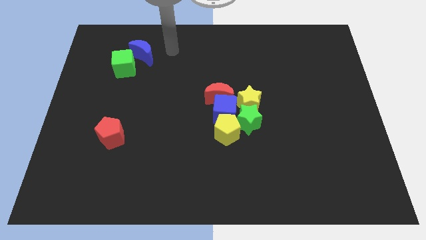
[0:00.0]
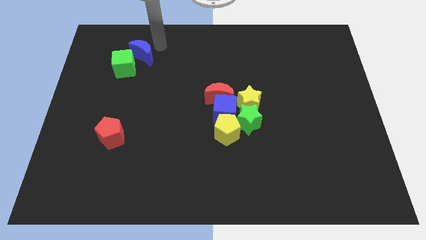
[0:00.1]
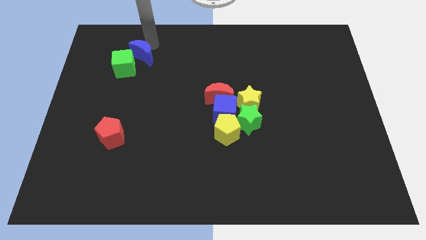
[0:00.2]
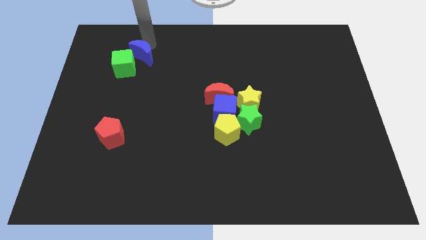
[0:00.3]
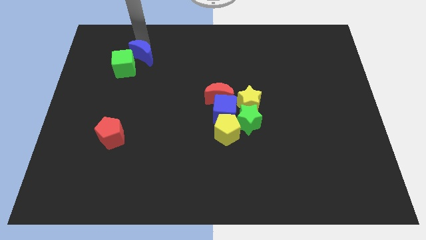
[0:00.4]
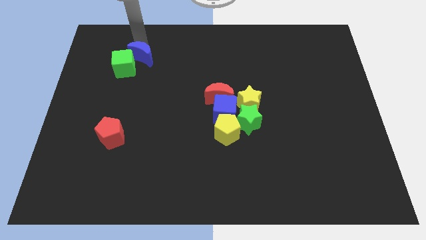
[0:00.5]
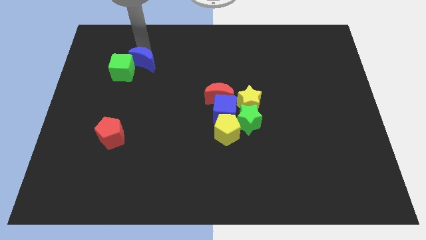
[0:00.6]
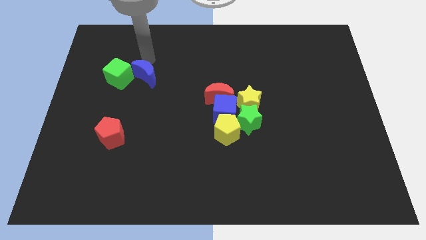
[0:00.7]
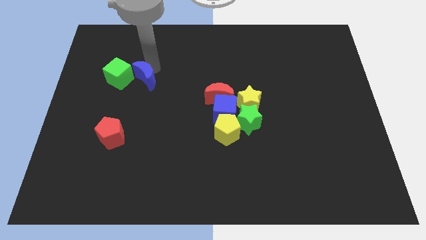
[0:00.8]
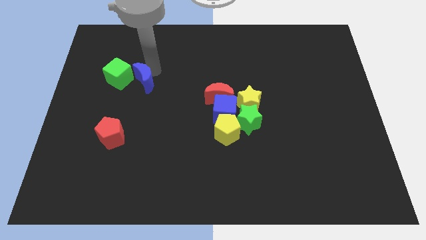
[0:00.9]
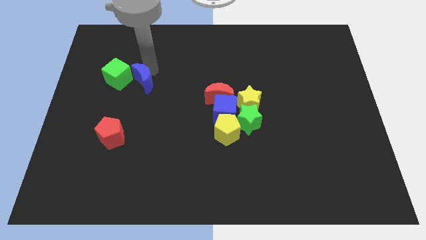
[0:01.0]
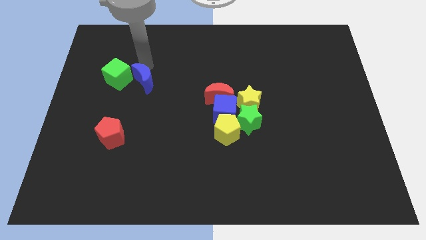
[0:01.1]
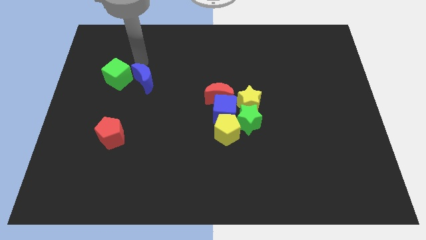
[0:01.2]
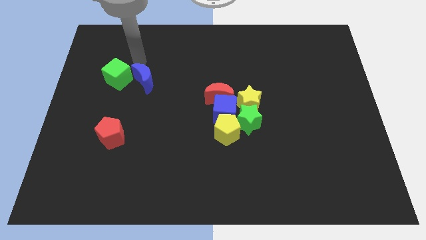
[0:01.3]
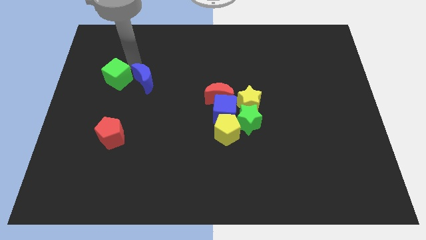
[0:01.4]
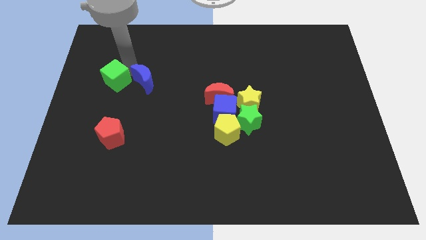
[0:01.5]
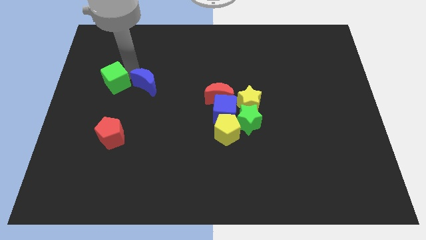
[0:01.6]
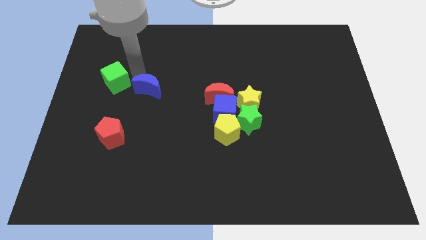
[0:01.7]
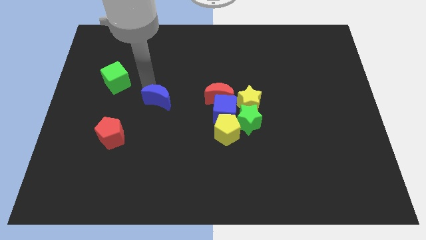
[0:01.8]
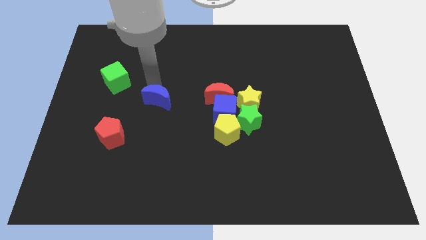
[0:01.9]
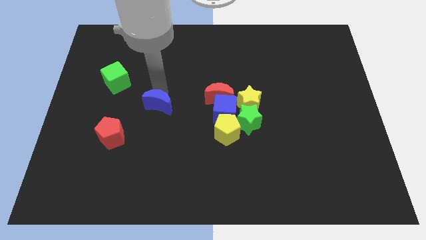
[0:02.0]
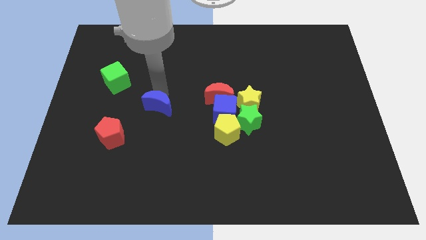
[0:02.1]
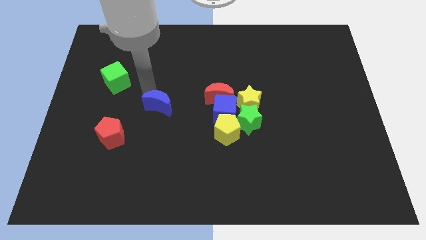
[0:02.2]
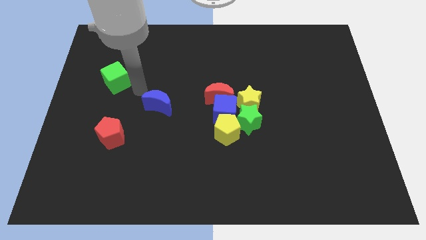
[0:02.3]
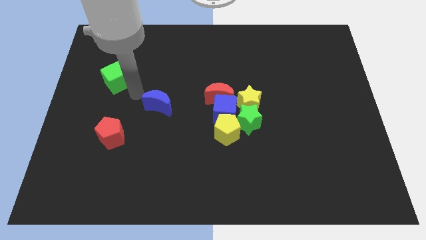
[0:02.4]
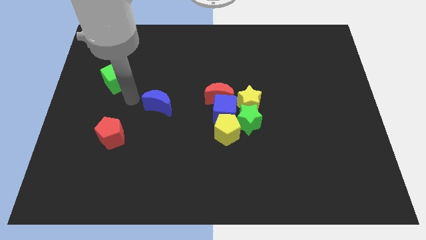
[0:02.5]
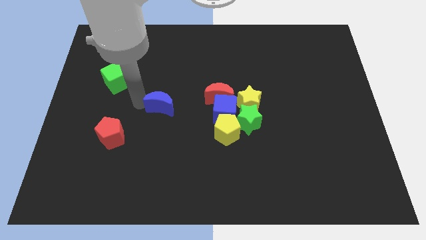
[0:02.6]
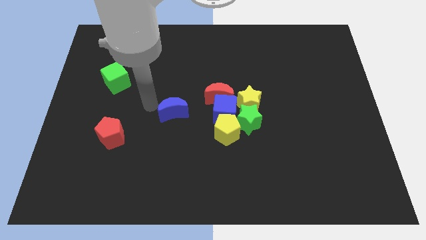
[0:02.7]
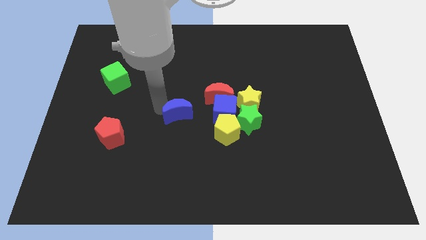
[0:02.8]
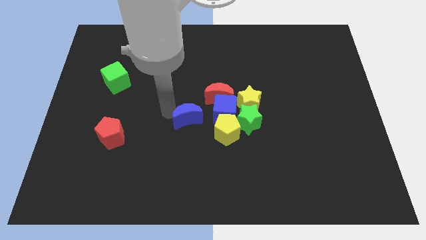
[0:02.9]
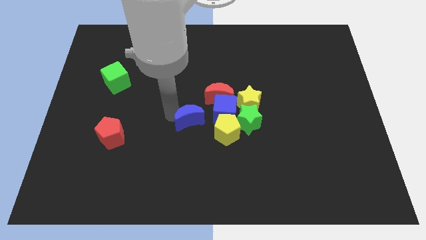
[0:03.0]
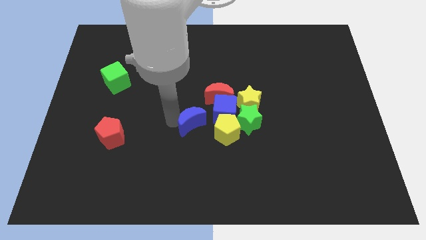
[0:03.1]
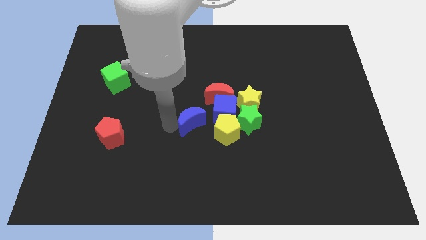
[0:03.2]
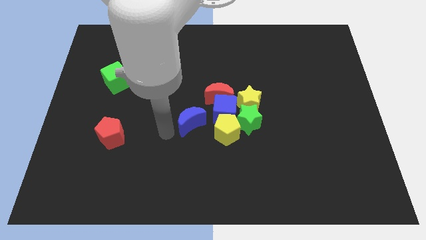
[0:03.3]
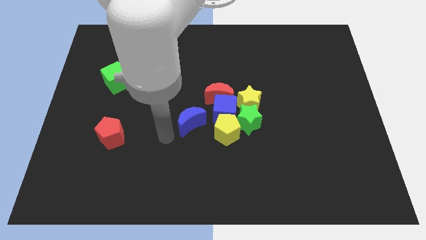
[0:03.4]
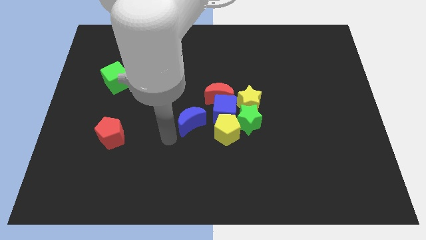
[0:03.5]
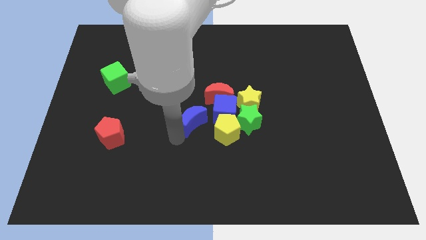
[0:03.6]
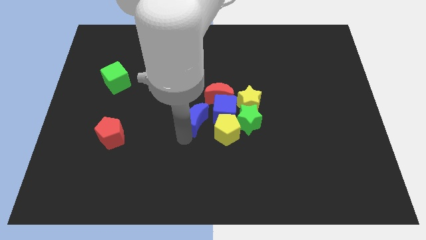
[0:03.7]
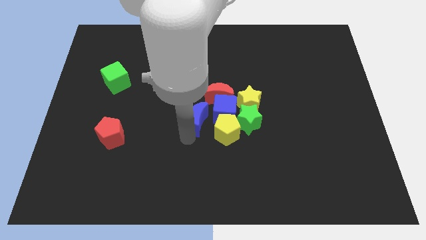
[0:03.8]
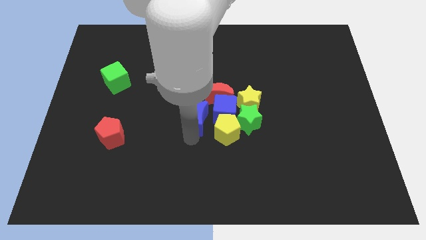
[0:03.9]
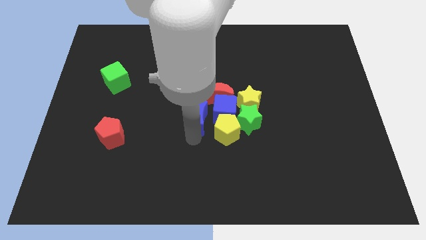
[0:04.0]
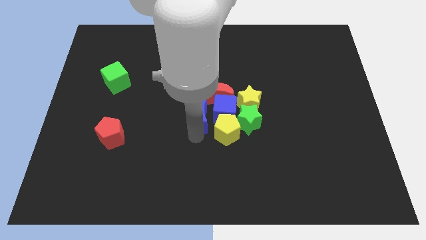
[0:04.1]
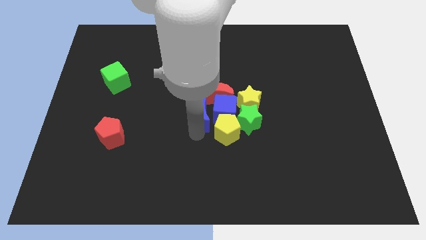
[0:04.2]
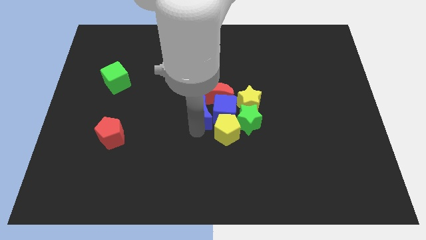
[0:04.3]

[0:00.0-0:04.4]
slide the blue moon to the left side of the blue cube

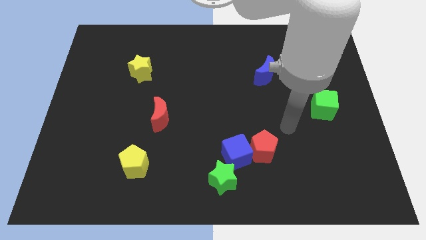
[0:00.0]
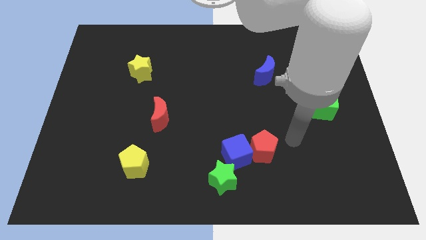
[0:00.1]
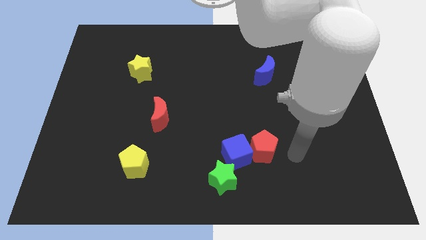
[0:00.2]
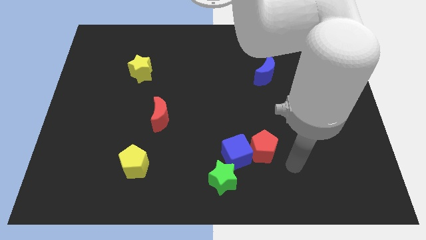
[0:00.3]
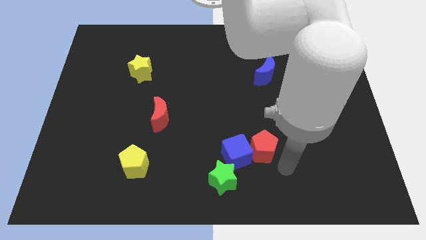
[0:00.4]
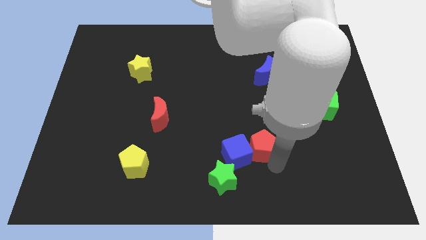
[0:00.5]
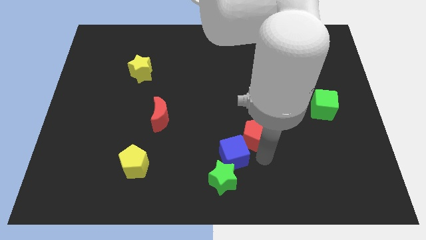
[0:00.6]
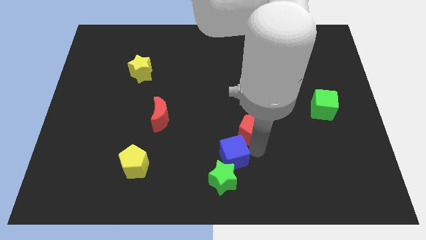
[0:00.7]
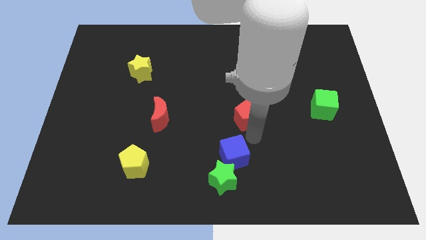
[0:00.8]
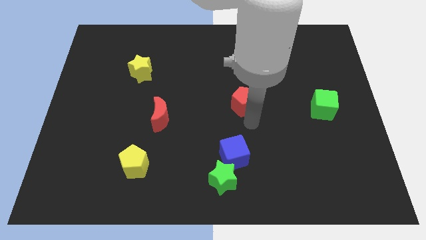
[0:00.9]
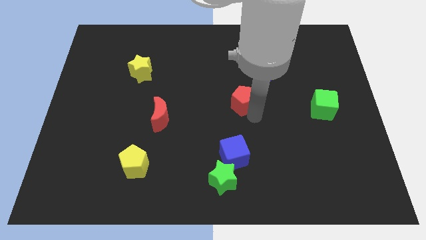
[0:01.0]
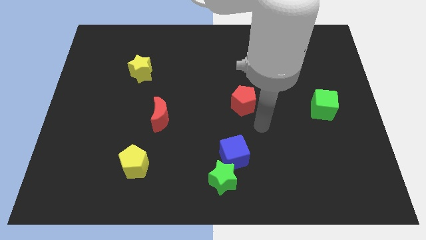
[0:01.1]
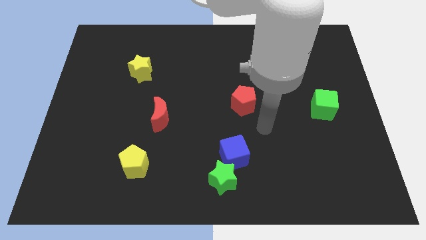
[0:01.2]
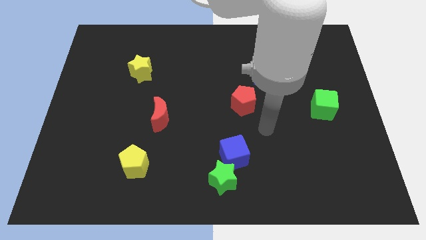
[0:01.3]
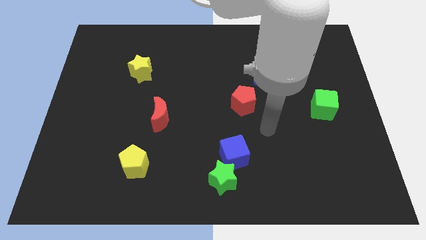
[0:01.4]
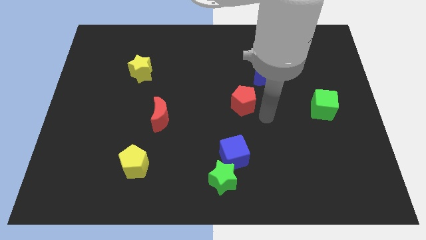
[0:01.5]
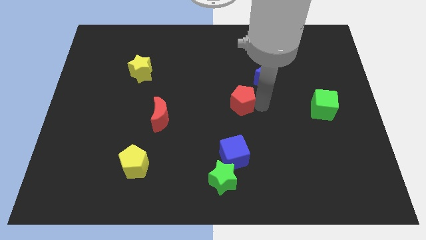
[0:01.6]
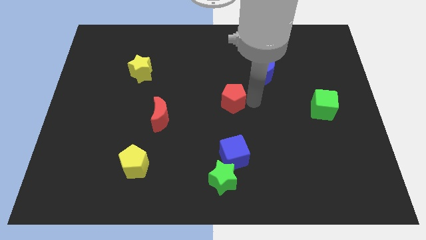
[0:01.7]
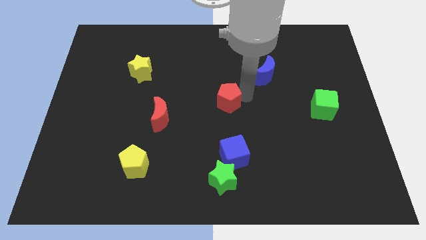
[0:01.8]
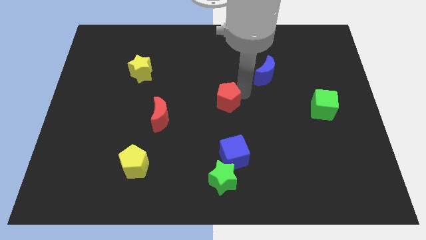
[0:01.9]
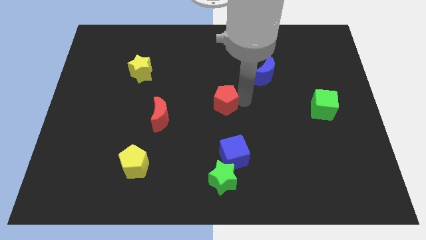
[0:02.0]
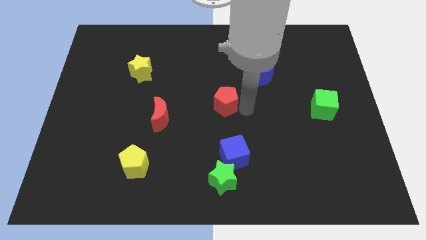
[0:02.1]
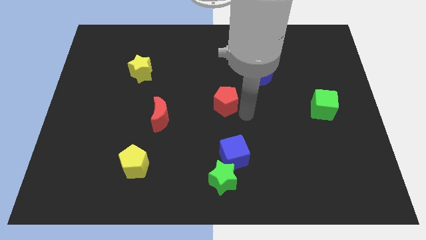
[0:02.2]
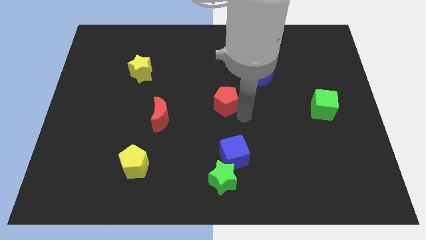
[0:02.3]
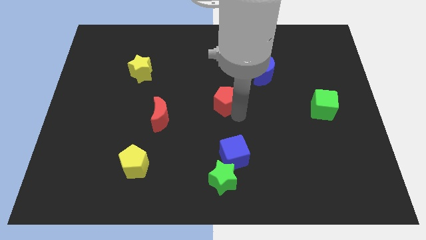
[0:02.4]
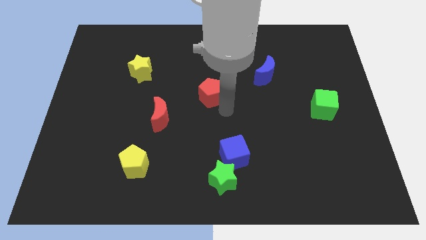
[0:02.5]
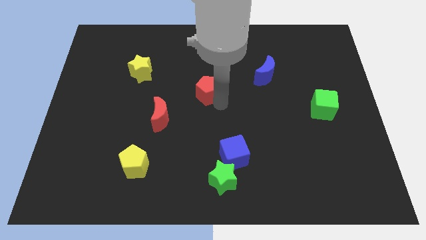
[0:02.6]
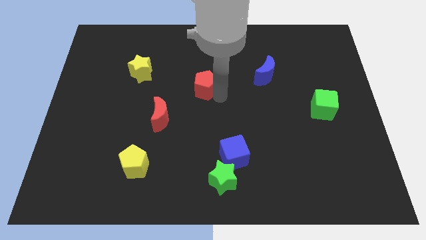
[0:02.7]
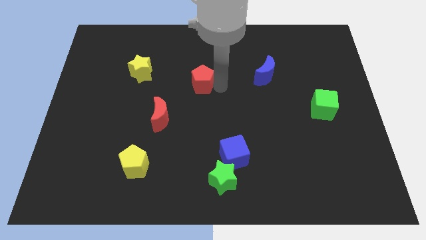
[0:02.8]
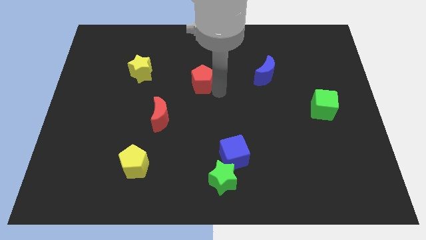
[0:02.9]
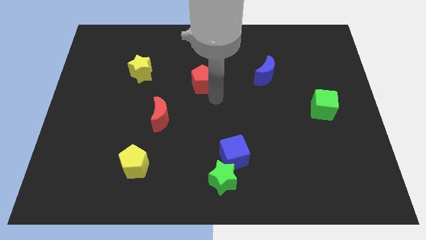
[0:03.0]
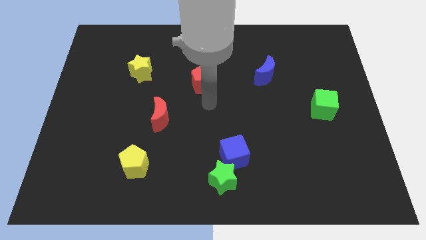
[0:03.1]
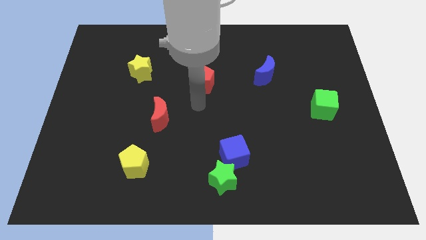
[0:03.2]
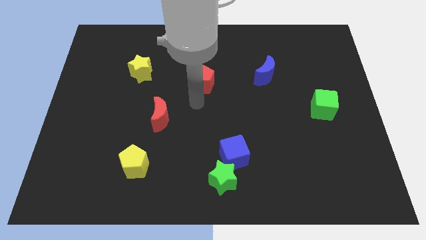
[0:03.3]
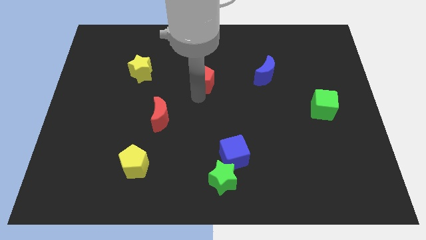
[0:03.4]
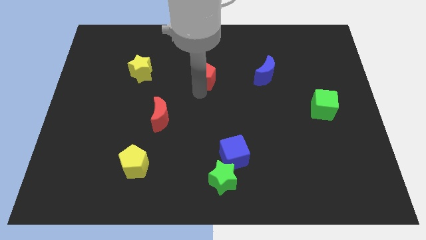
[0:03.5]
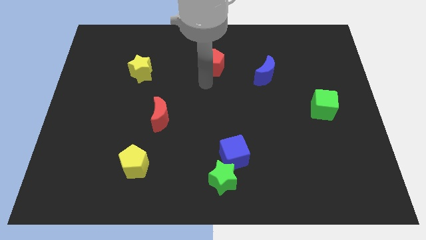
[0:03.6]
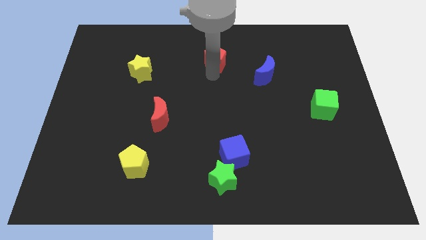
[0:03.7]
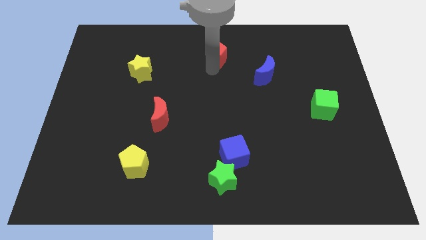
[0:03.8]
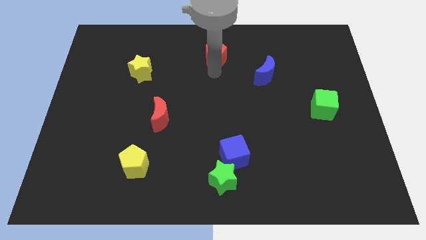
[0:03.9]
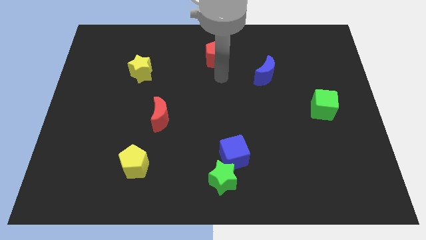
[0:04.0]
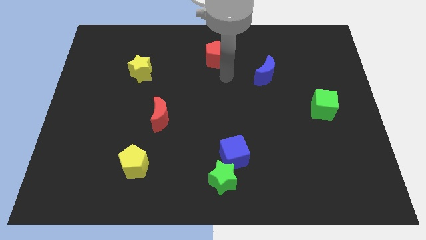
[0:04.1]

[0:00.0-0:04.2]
move red pentagon diagonally to blue moon

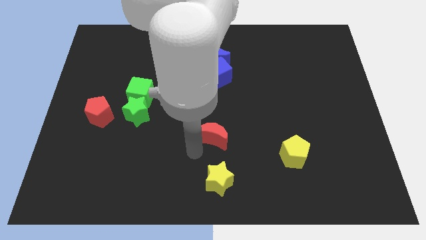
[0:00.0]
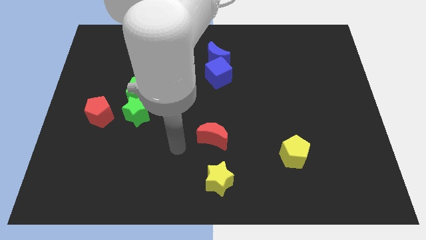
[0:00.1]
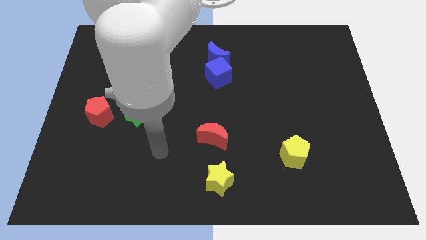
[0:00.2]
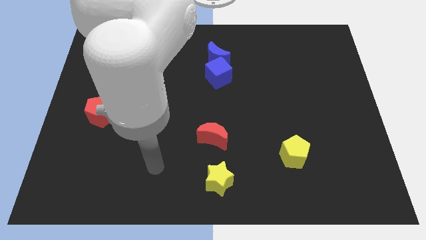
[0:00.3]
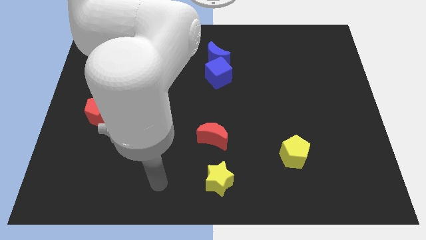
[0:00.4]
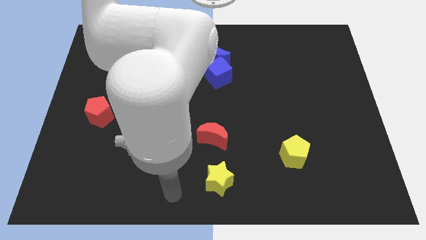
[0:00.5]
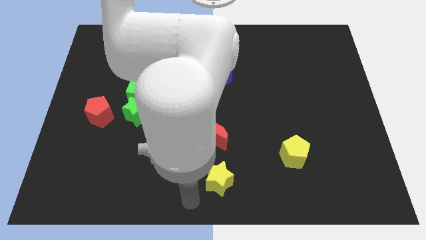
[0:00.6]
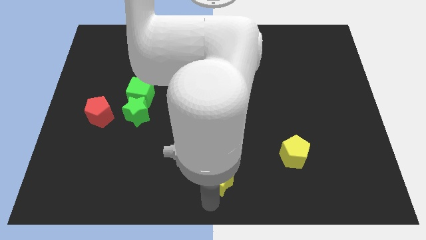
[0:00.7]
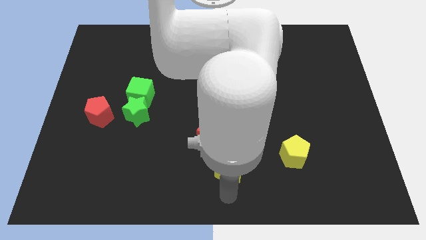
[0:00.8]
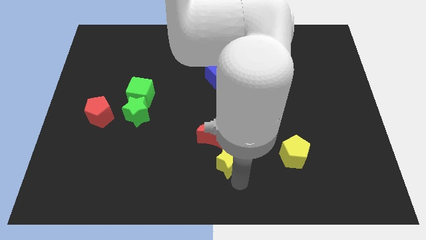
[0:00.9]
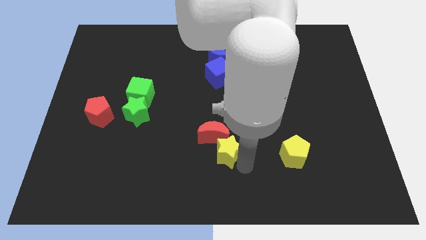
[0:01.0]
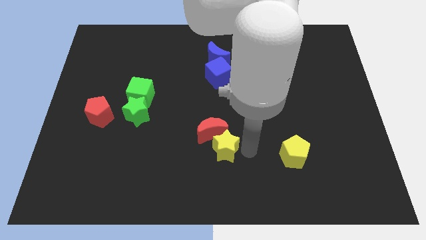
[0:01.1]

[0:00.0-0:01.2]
place the yellow star at the bottom right side of red moon
